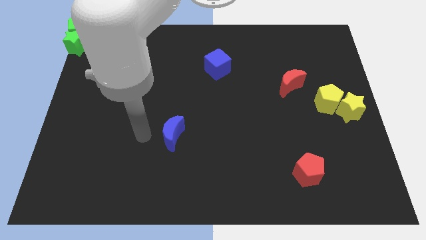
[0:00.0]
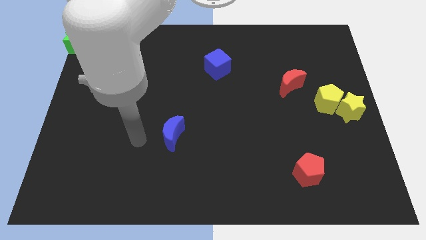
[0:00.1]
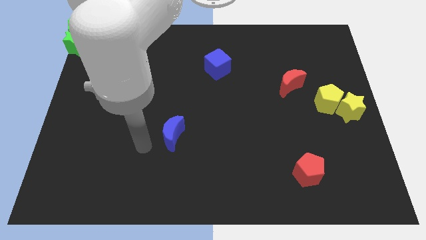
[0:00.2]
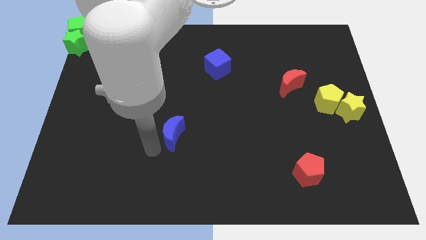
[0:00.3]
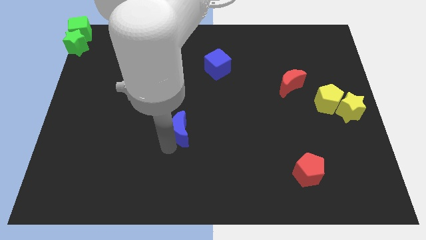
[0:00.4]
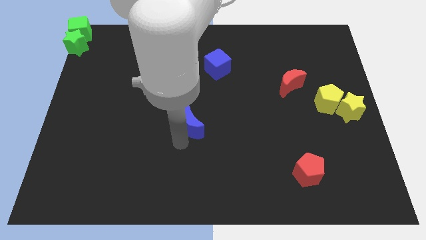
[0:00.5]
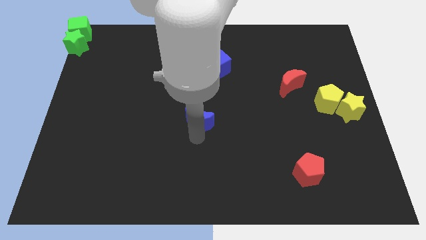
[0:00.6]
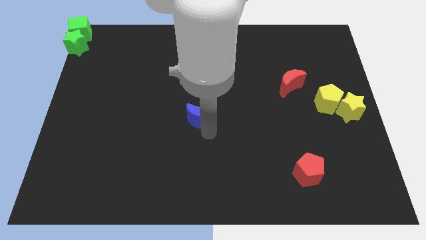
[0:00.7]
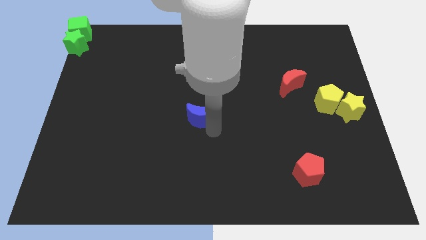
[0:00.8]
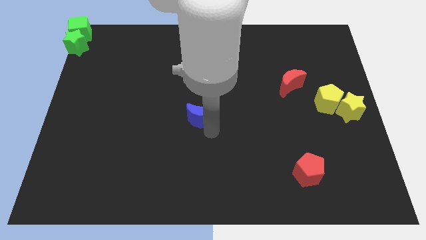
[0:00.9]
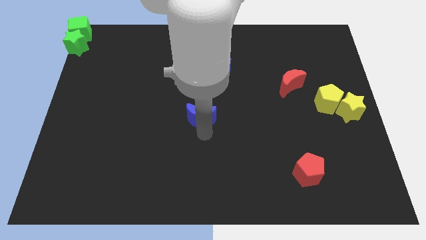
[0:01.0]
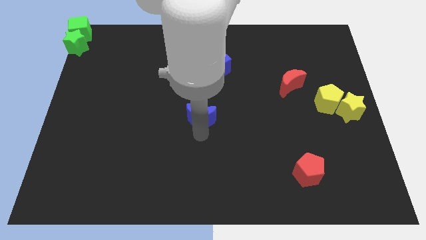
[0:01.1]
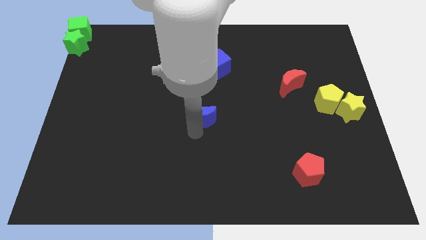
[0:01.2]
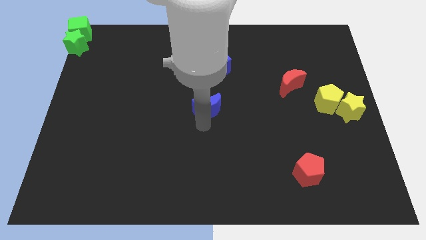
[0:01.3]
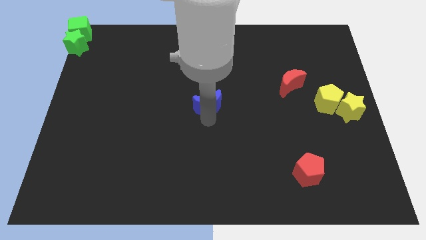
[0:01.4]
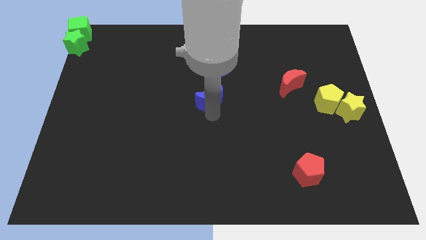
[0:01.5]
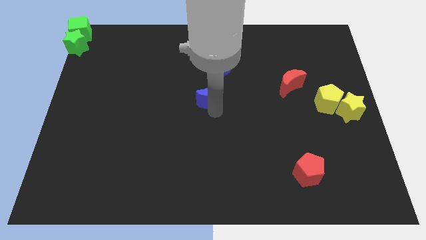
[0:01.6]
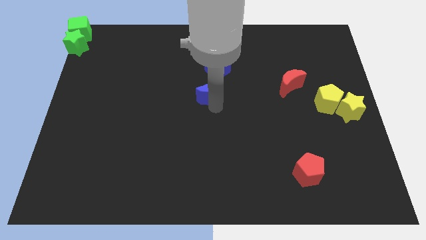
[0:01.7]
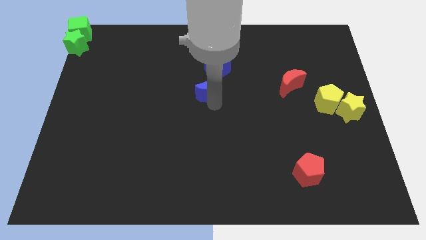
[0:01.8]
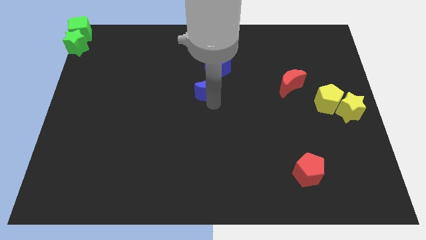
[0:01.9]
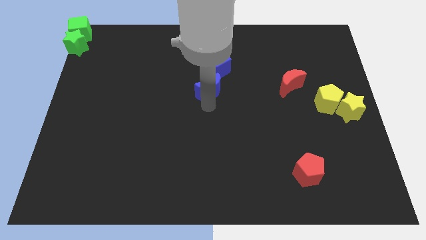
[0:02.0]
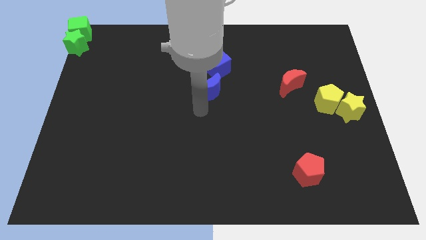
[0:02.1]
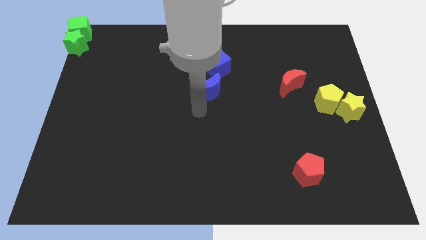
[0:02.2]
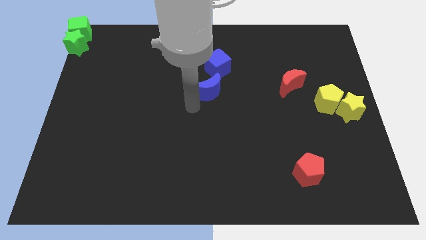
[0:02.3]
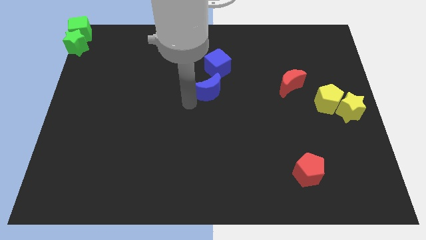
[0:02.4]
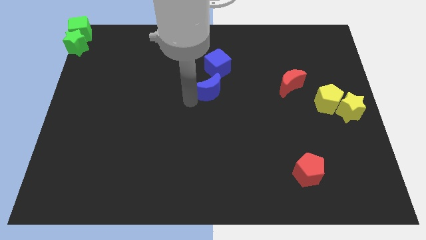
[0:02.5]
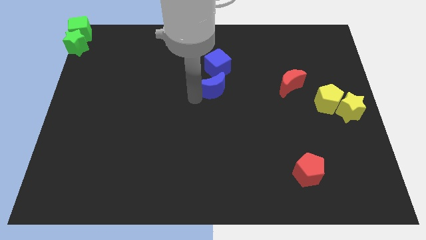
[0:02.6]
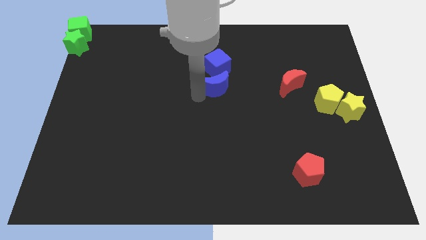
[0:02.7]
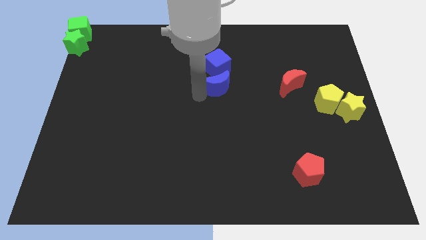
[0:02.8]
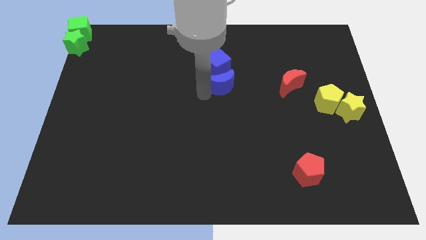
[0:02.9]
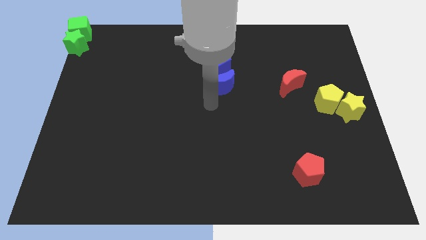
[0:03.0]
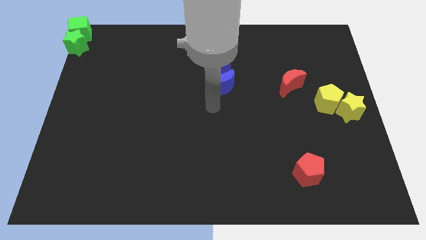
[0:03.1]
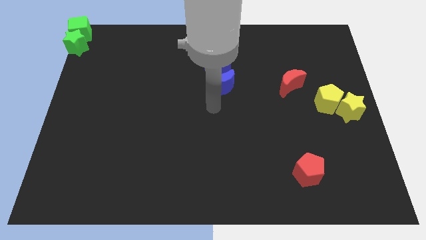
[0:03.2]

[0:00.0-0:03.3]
move the blue moon under the blue cube

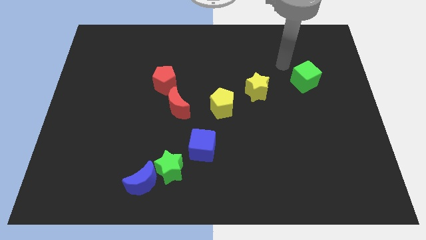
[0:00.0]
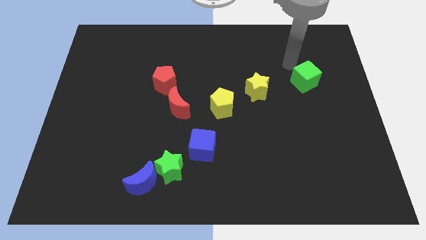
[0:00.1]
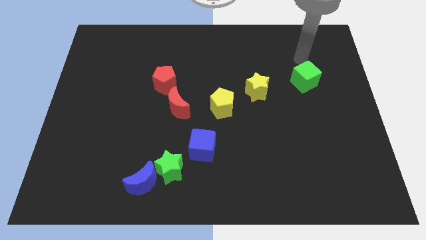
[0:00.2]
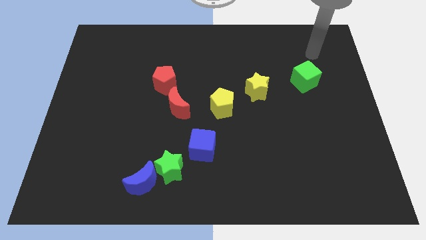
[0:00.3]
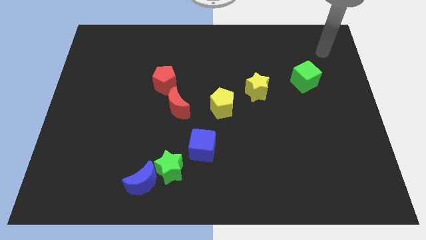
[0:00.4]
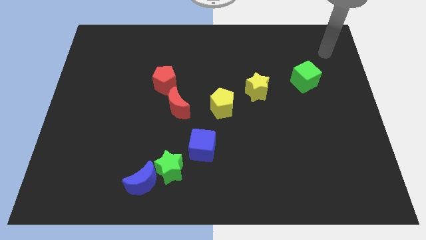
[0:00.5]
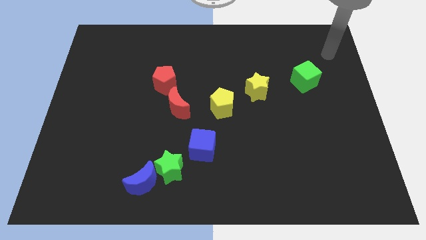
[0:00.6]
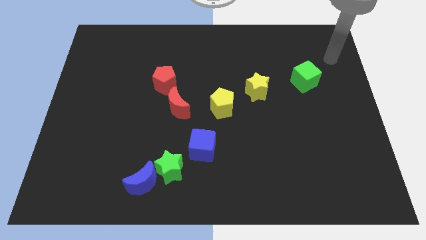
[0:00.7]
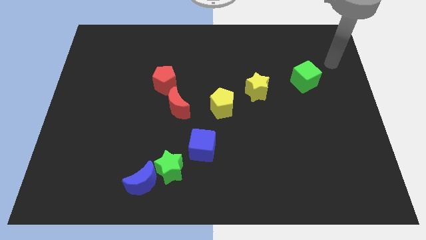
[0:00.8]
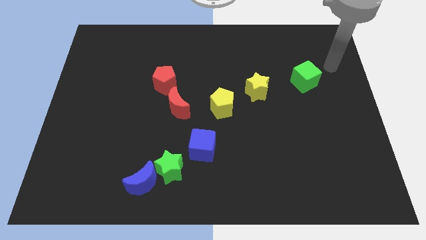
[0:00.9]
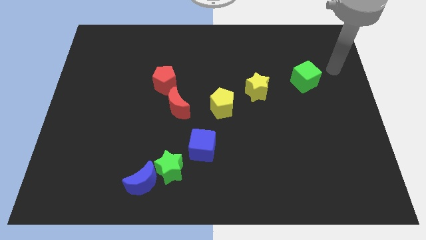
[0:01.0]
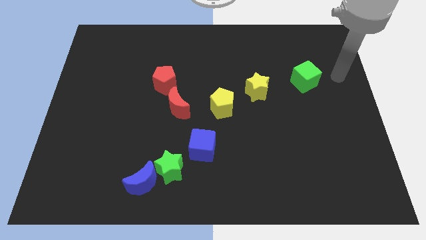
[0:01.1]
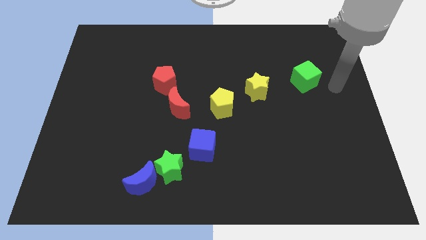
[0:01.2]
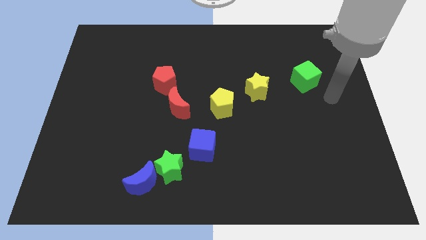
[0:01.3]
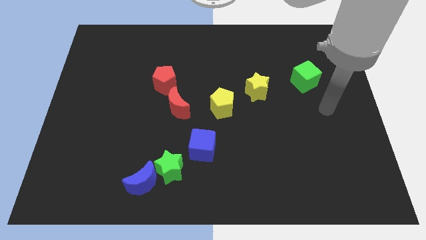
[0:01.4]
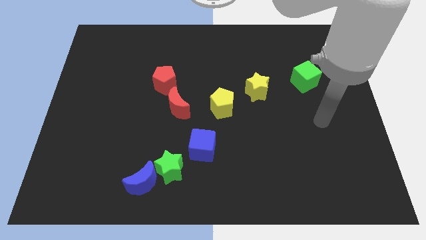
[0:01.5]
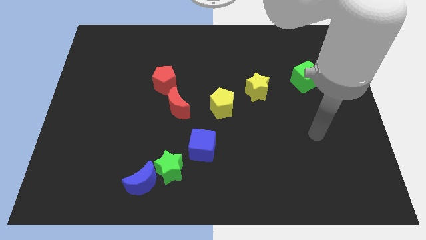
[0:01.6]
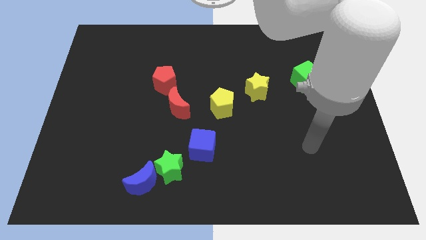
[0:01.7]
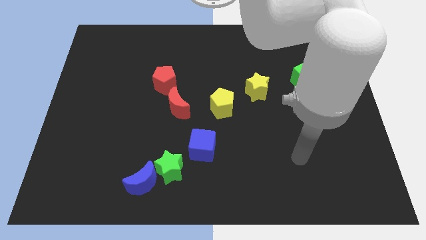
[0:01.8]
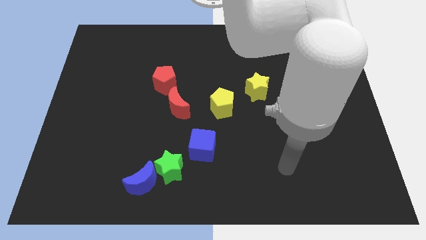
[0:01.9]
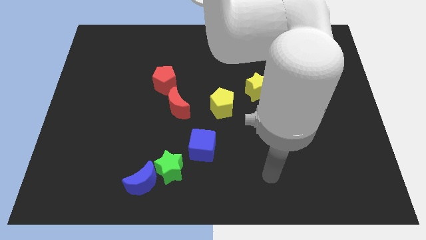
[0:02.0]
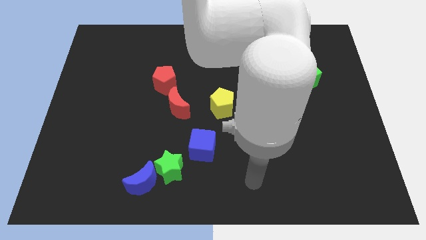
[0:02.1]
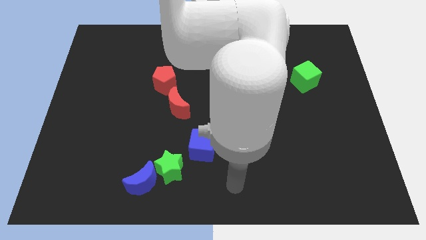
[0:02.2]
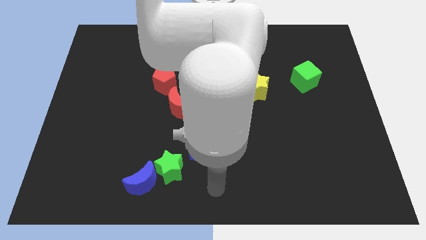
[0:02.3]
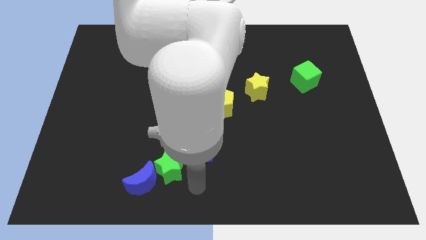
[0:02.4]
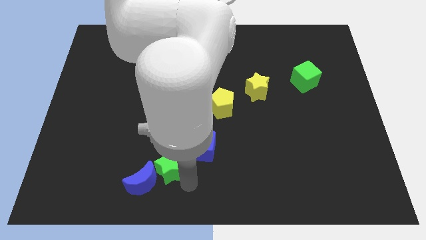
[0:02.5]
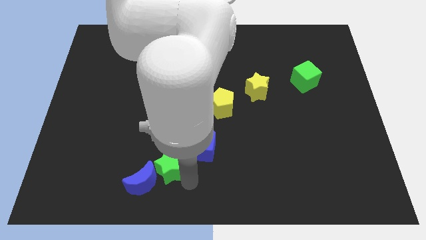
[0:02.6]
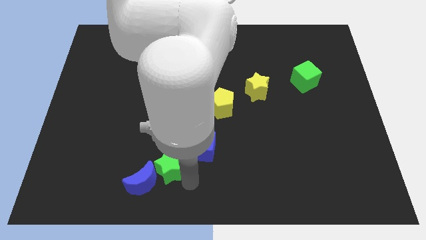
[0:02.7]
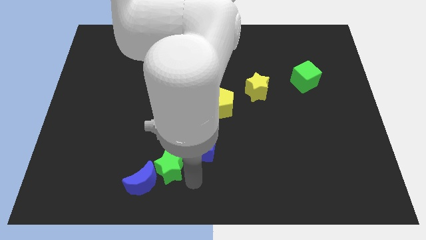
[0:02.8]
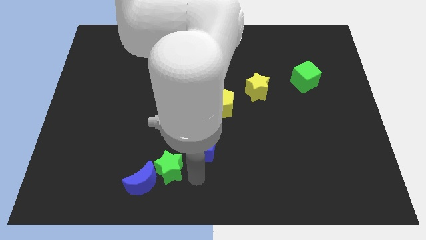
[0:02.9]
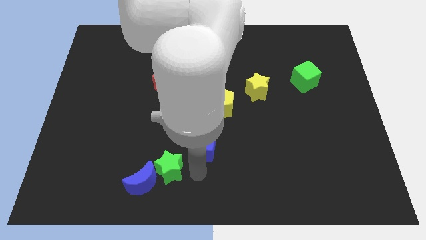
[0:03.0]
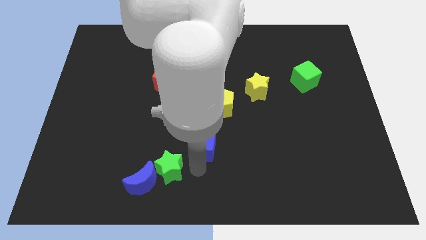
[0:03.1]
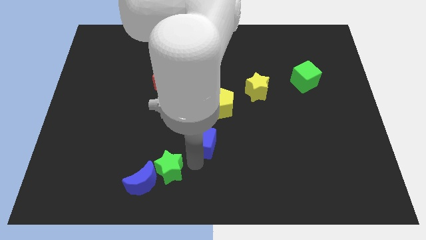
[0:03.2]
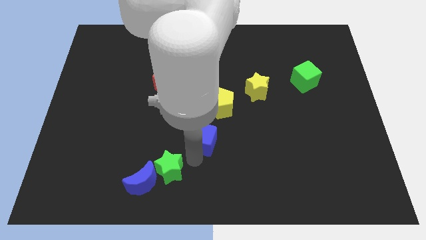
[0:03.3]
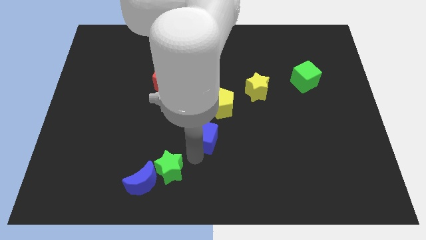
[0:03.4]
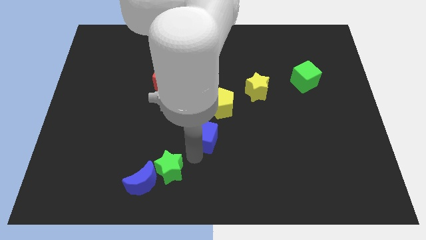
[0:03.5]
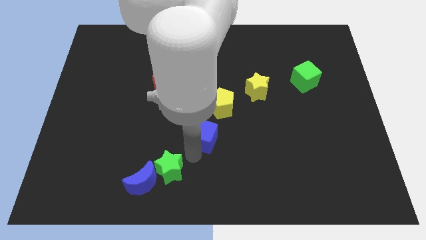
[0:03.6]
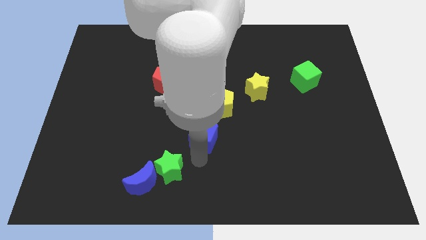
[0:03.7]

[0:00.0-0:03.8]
move the blue cube slightly to the top

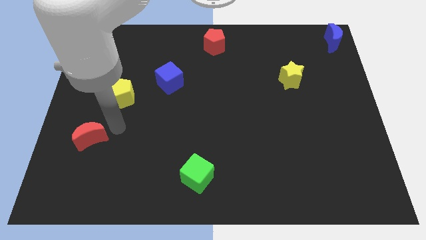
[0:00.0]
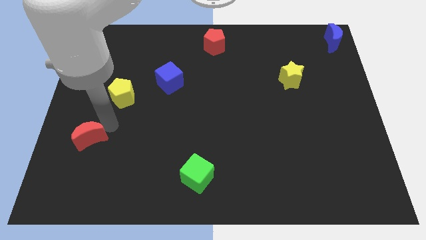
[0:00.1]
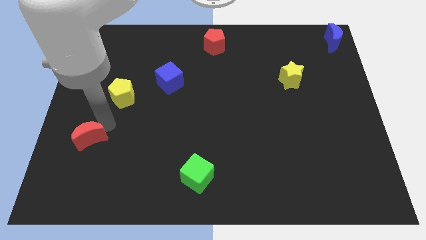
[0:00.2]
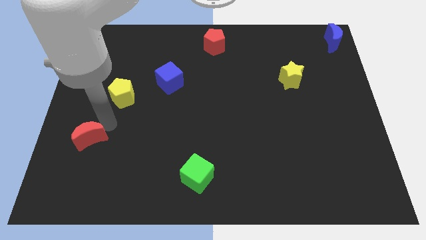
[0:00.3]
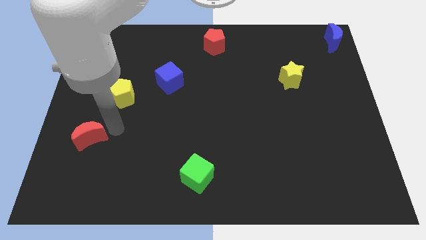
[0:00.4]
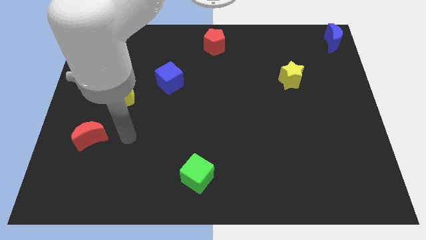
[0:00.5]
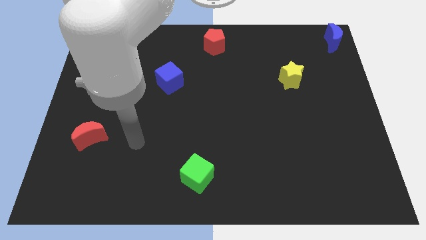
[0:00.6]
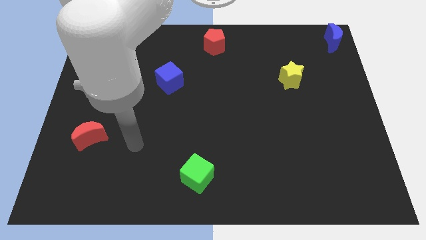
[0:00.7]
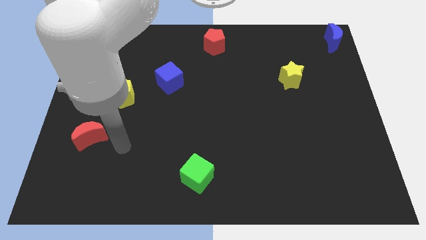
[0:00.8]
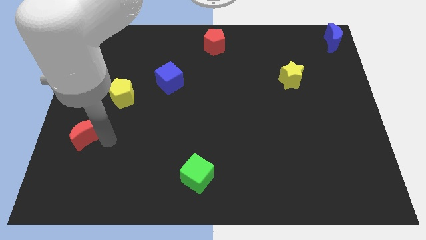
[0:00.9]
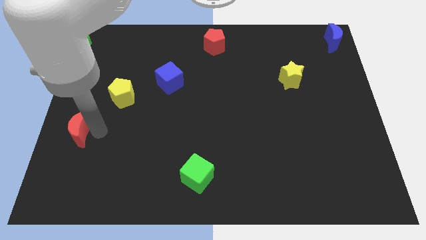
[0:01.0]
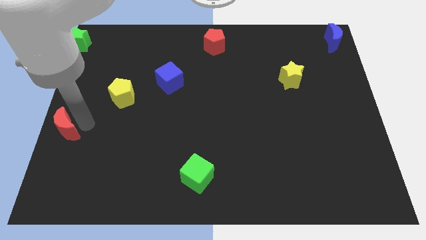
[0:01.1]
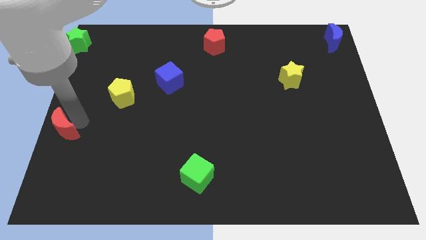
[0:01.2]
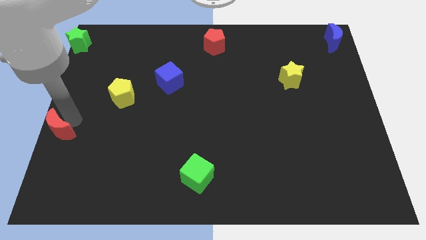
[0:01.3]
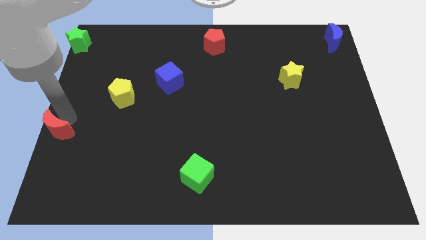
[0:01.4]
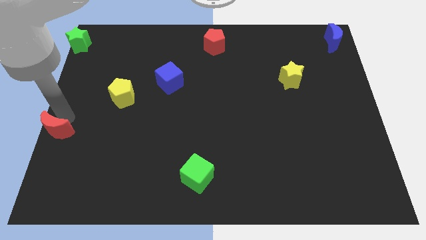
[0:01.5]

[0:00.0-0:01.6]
move red crescent to the left center of the board

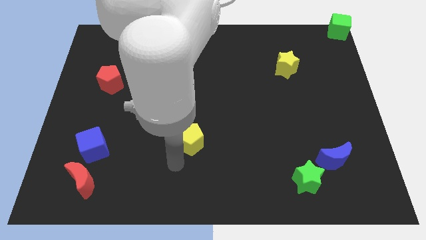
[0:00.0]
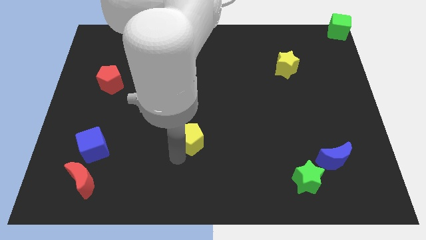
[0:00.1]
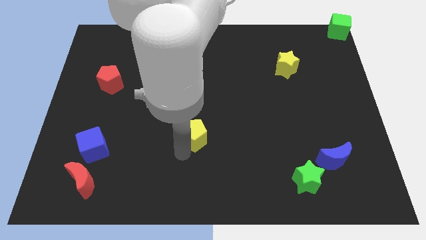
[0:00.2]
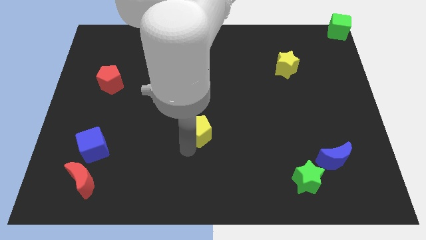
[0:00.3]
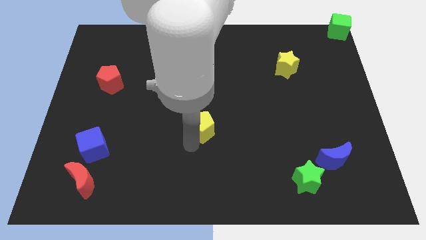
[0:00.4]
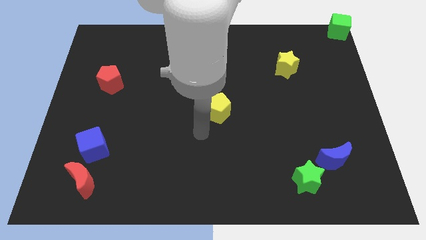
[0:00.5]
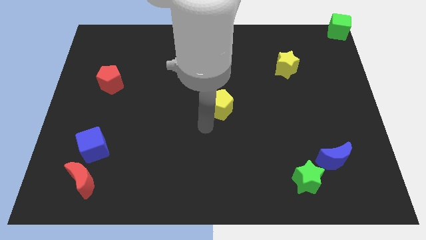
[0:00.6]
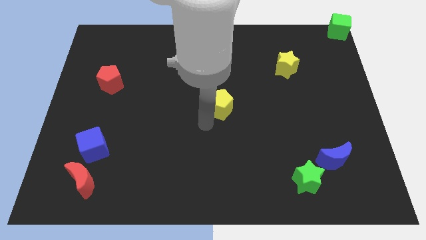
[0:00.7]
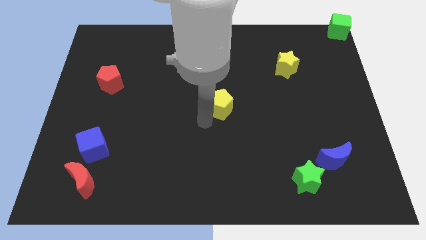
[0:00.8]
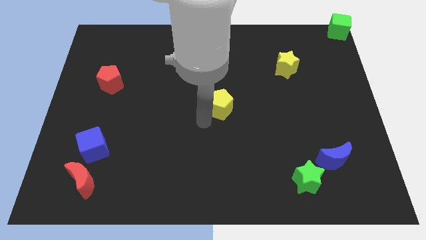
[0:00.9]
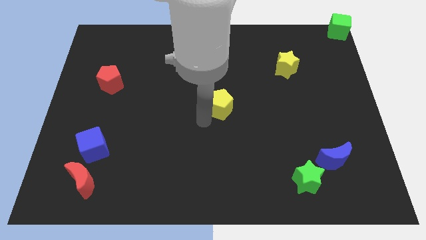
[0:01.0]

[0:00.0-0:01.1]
move the yellow pentagon towards the center of the board
